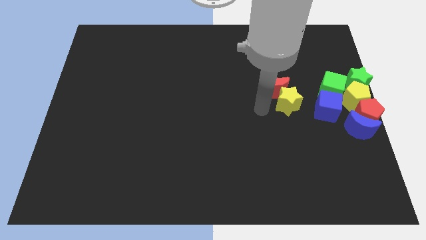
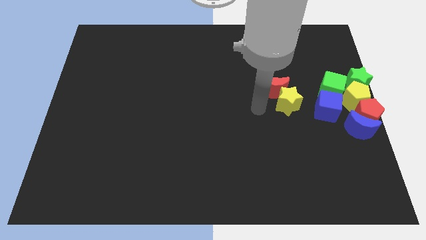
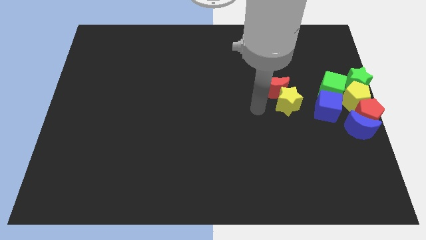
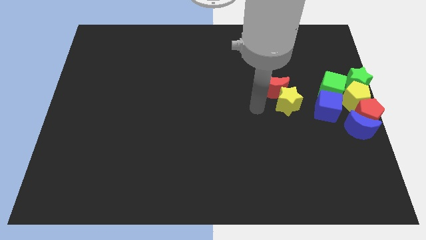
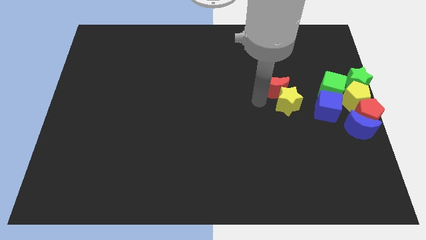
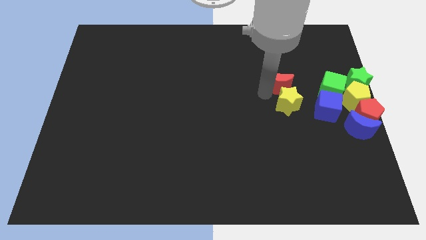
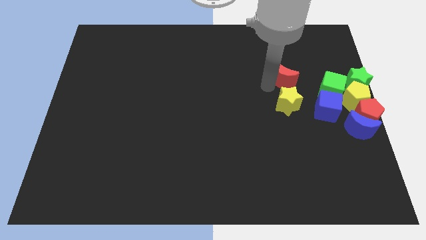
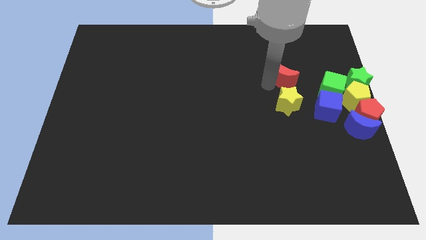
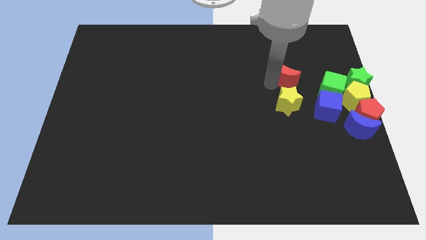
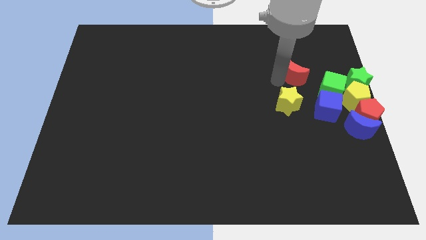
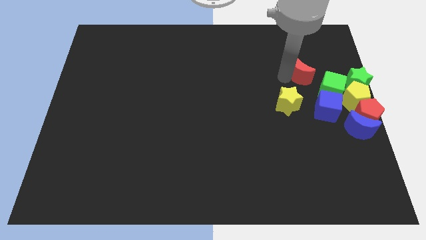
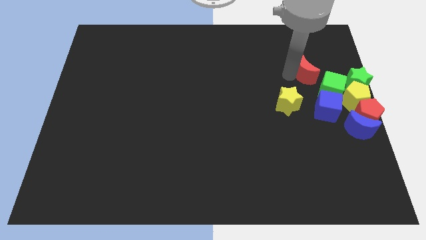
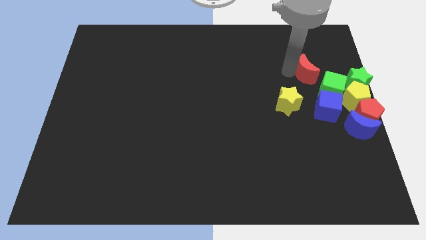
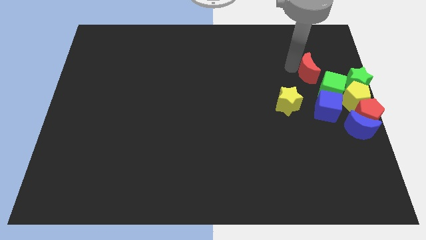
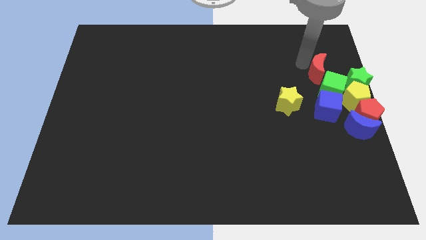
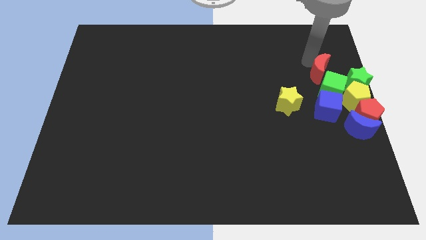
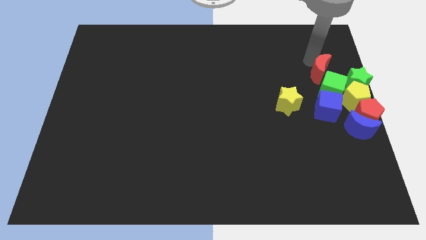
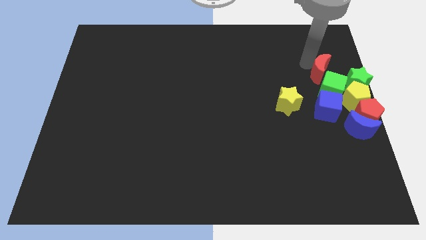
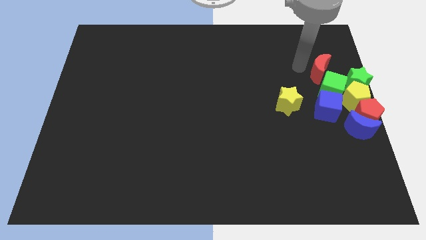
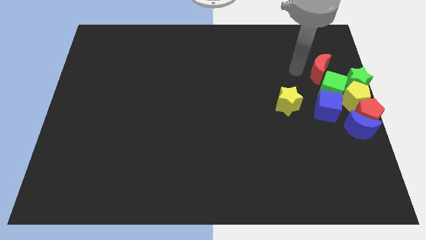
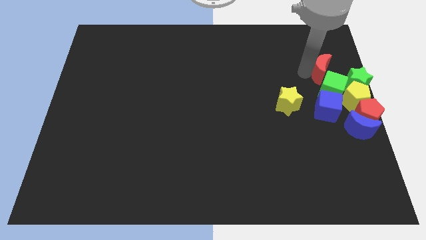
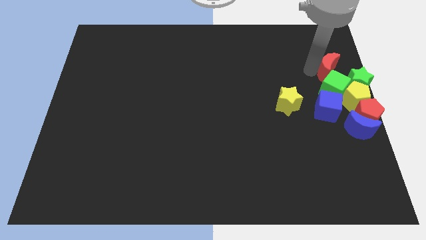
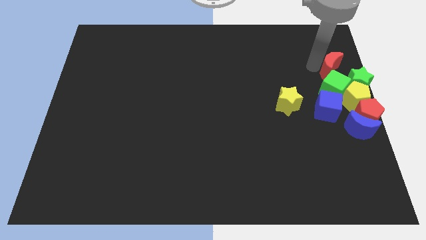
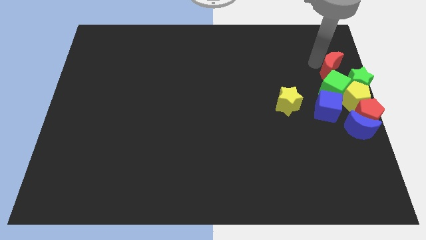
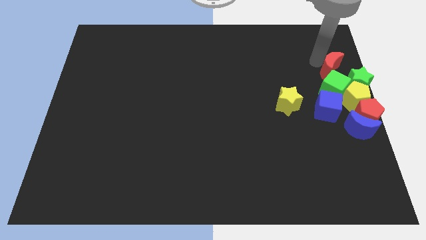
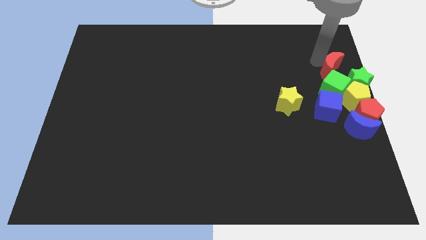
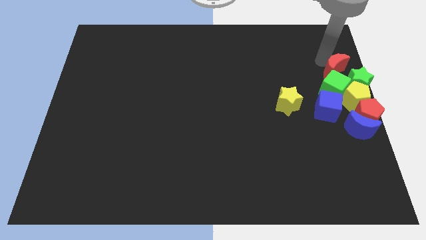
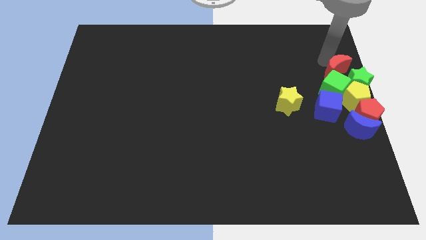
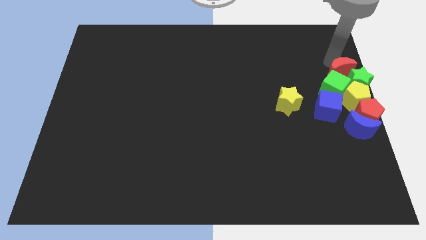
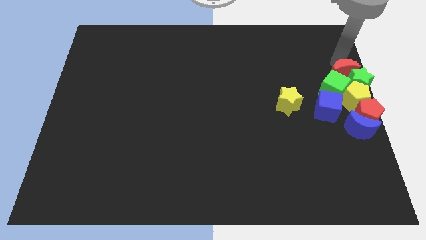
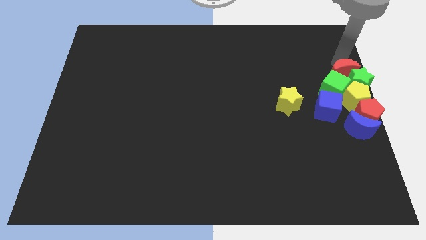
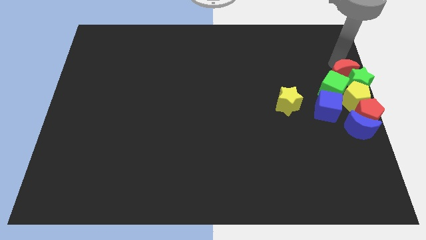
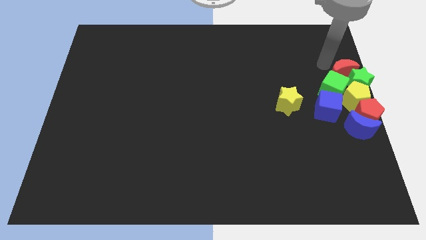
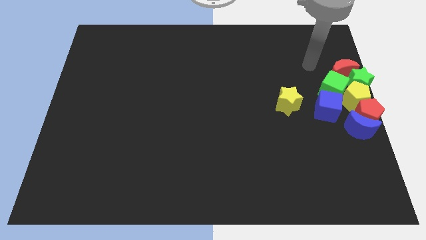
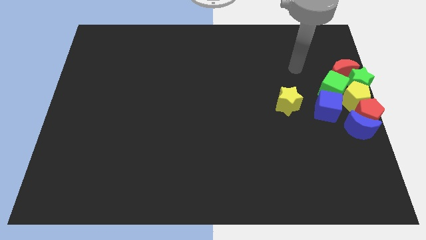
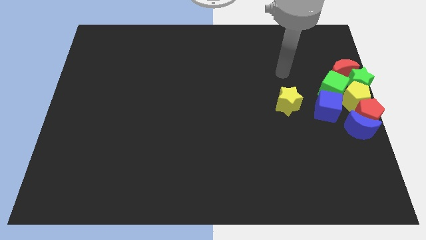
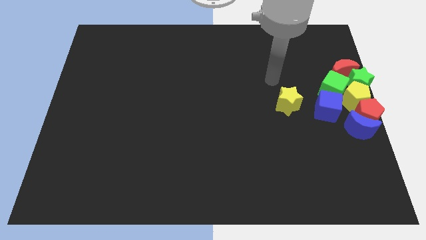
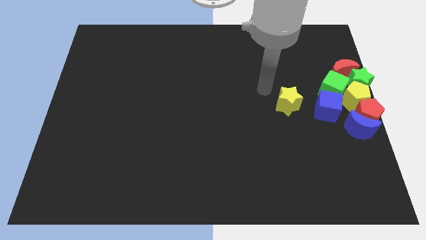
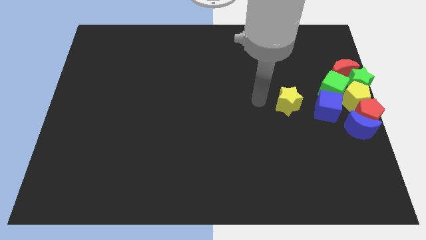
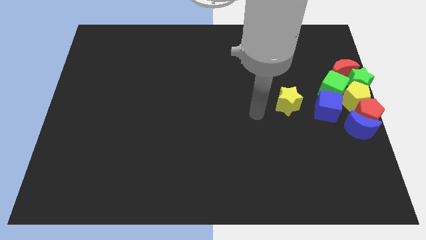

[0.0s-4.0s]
place the red crescent above the green blocks

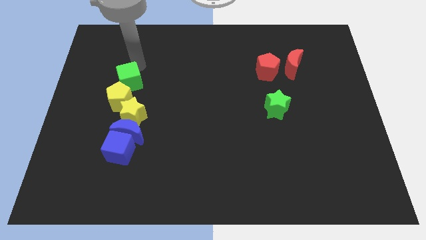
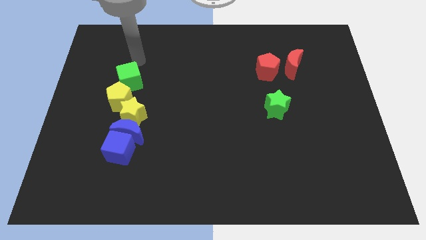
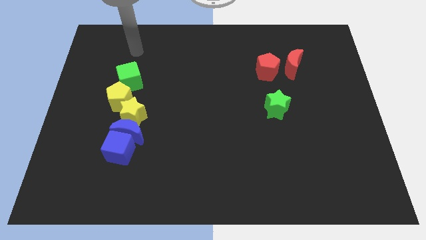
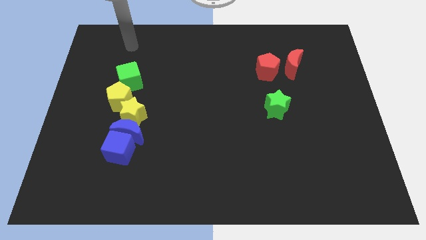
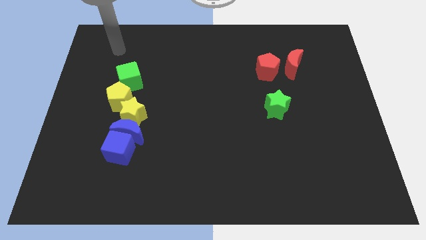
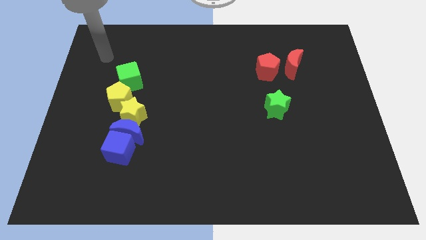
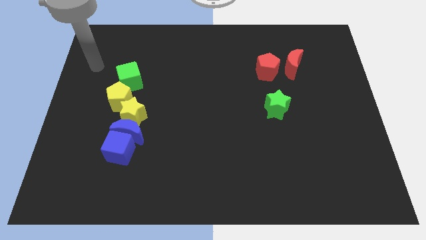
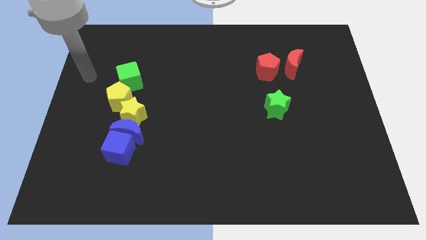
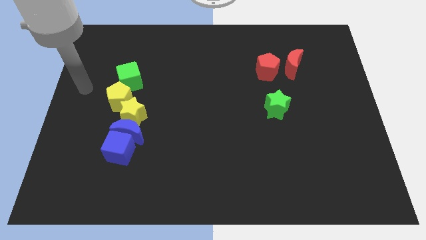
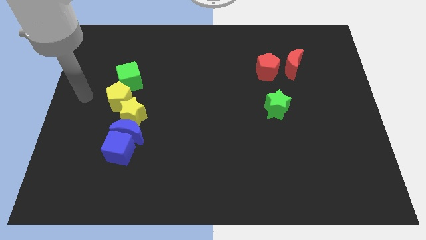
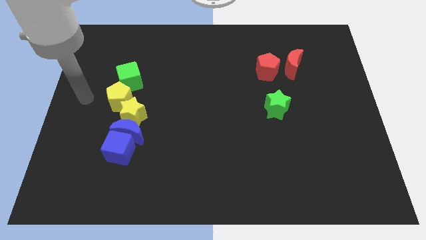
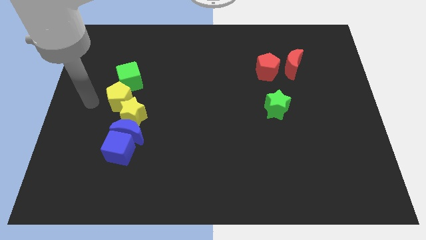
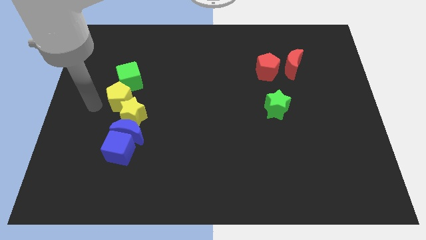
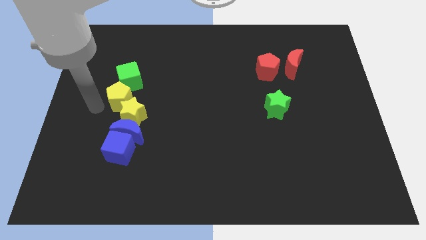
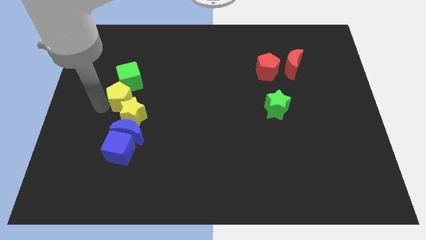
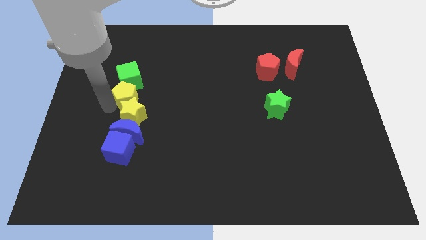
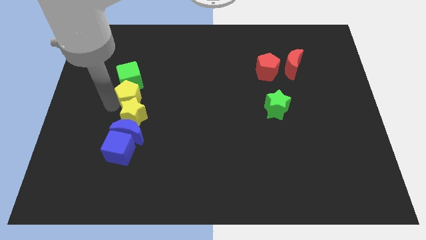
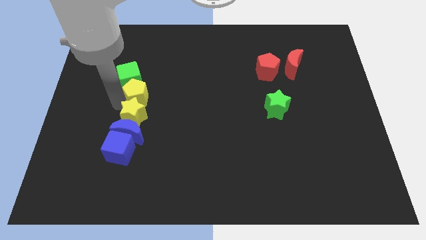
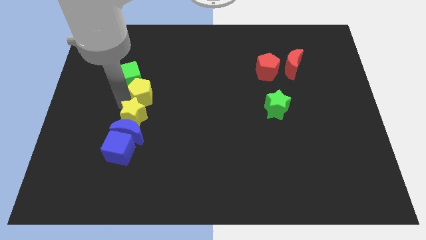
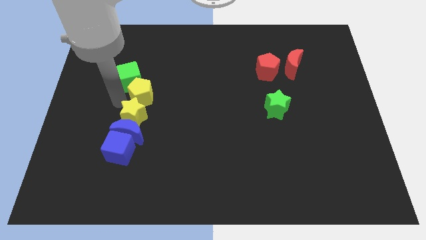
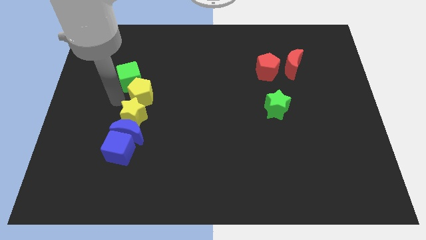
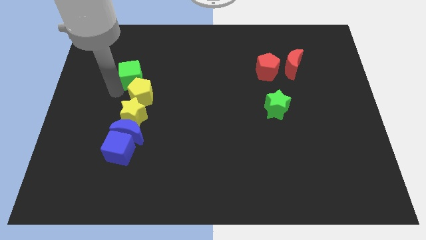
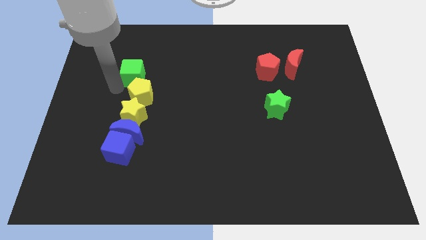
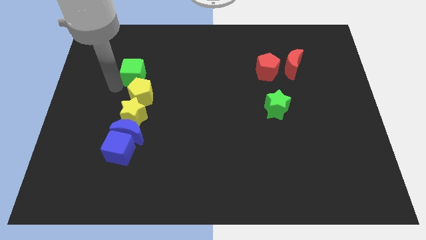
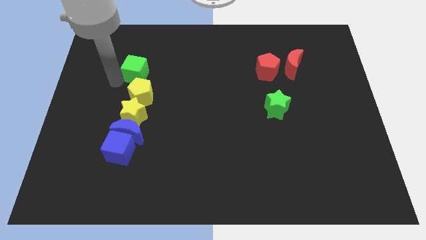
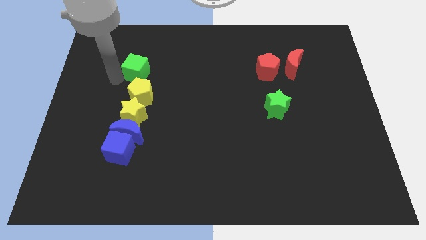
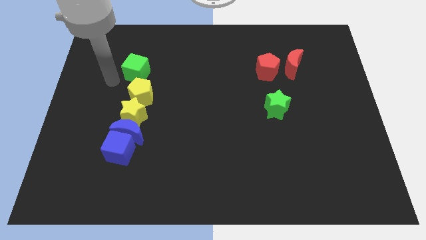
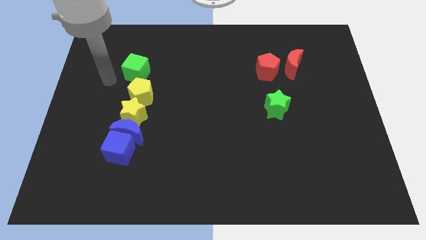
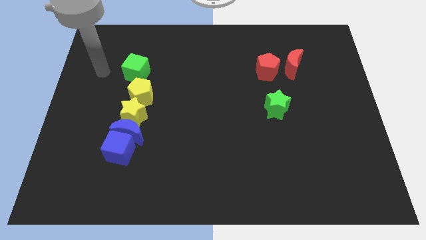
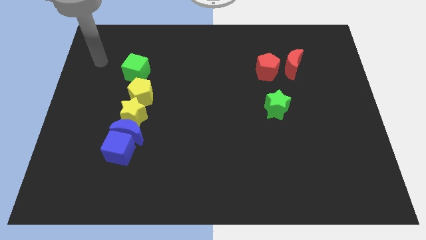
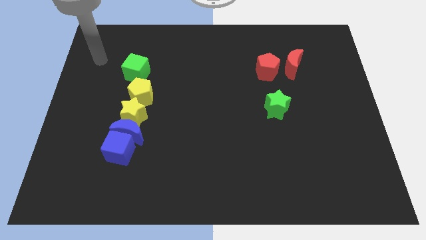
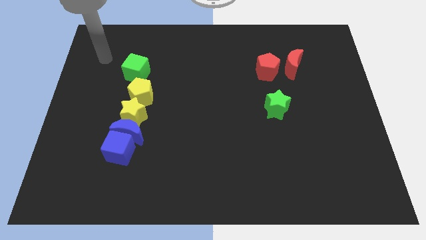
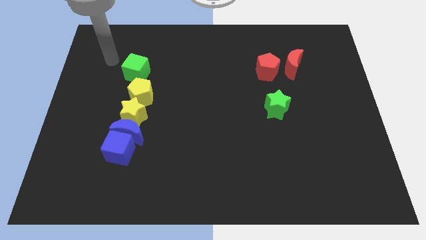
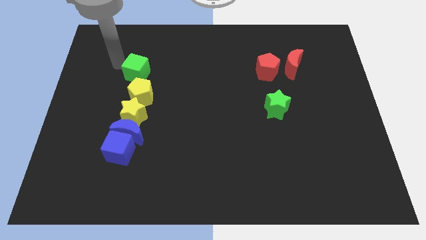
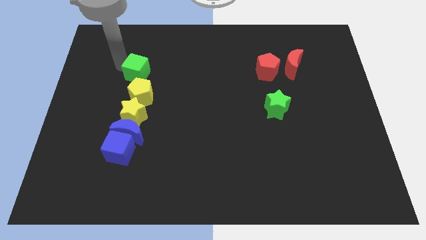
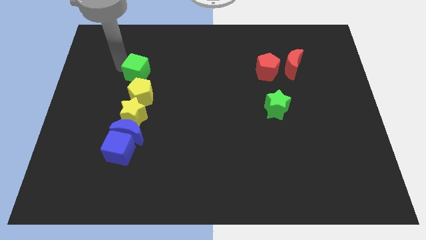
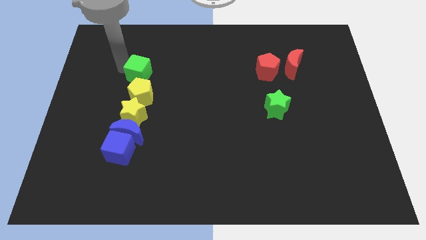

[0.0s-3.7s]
arrange the blue blocksyellow blocks and green cube in a vertical line

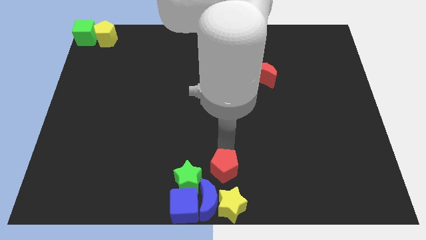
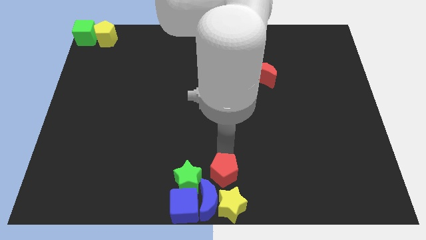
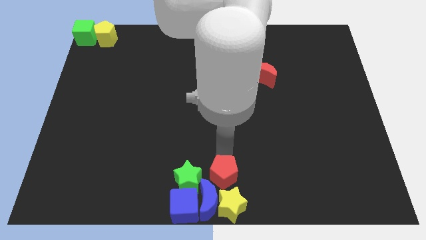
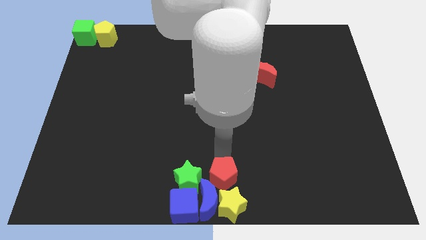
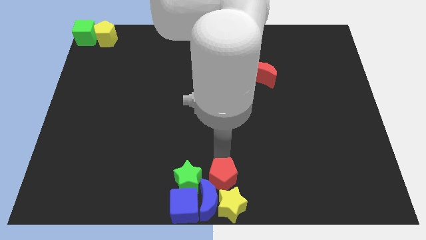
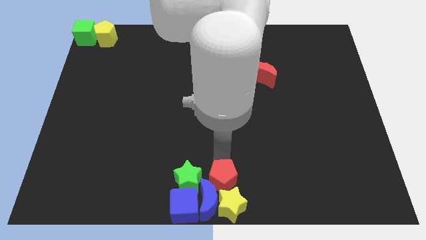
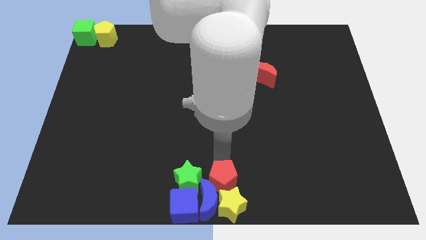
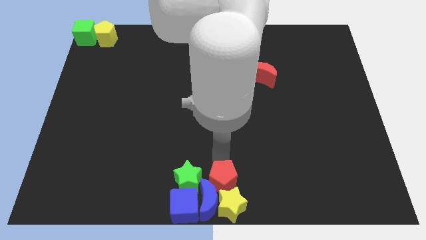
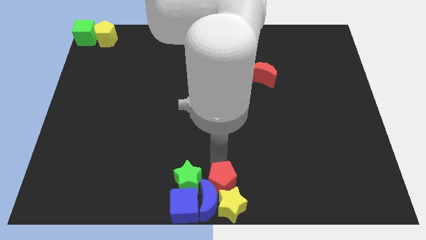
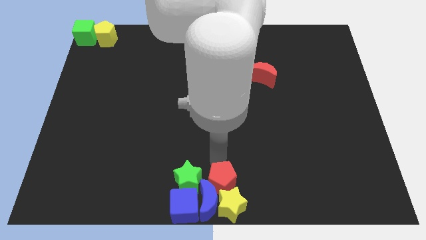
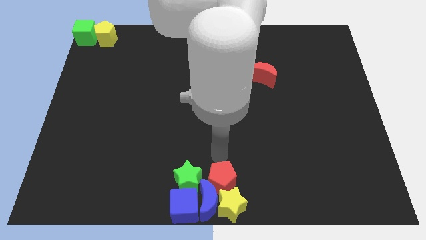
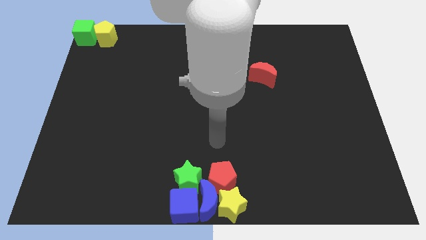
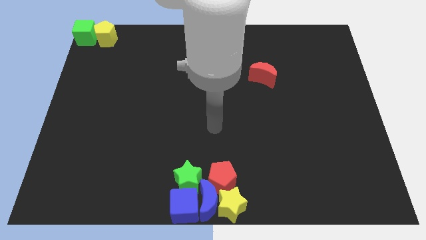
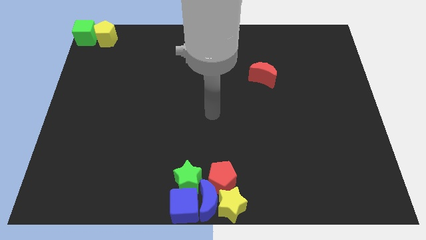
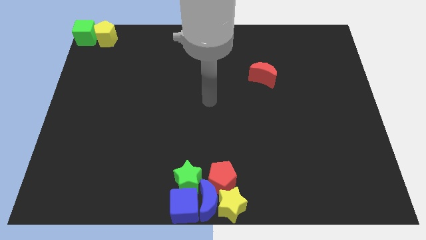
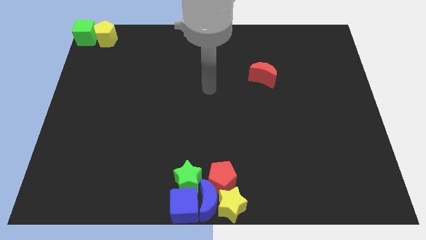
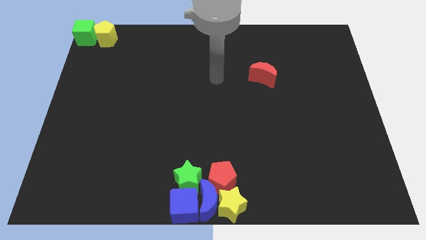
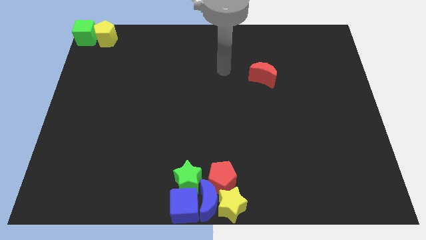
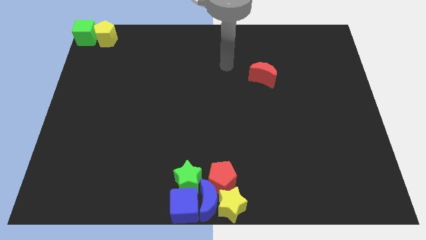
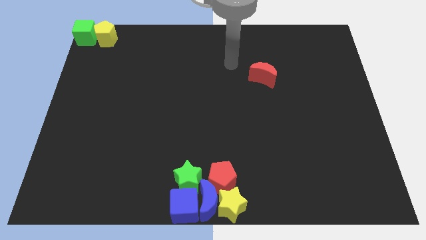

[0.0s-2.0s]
push the red pentagon into the blue crescent
